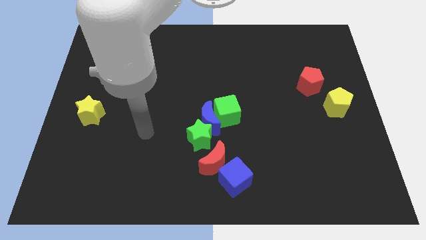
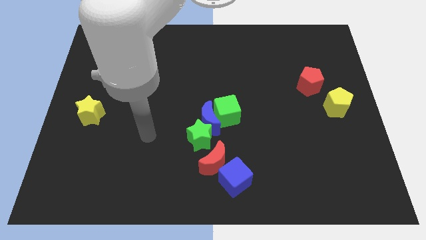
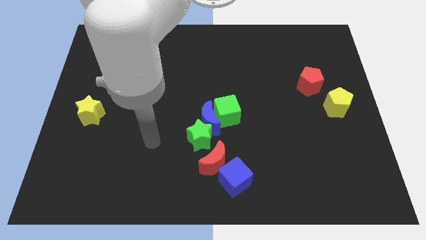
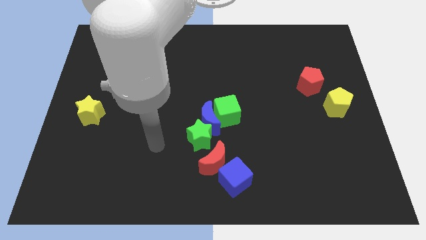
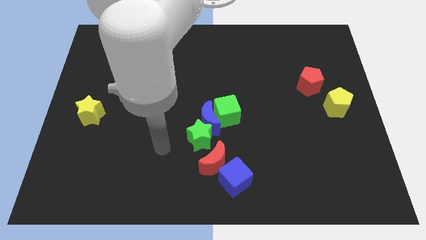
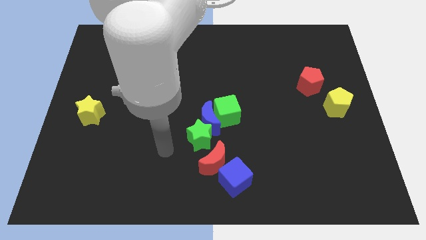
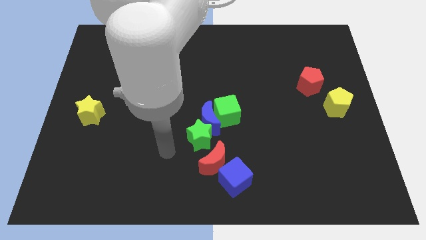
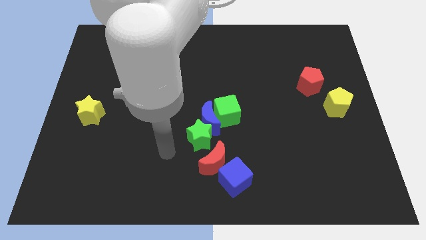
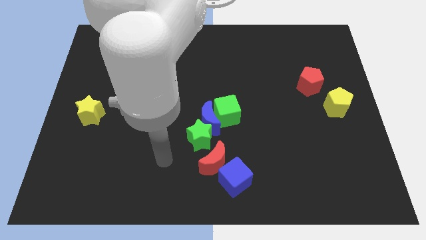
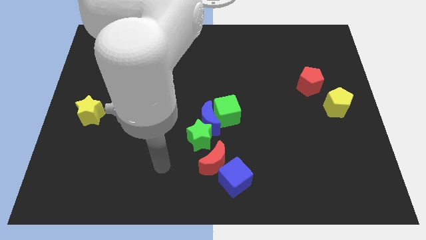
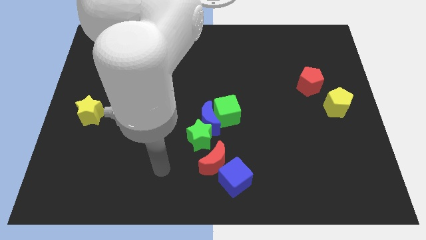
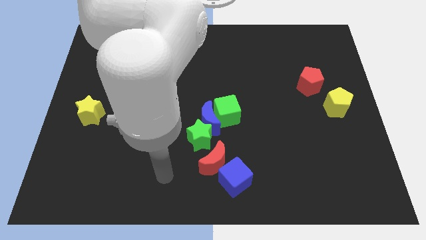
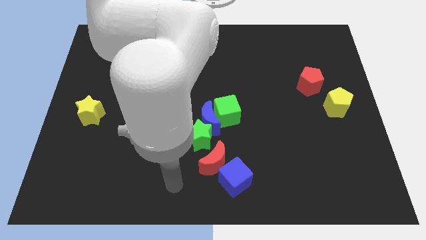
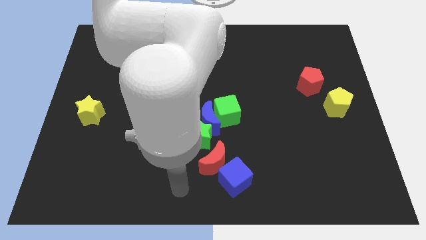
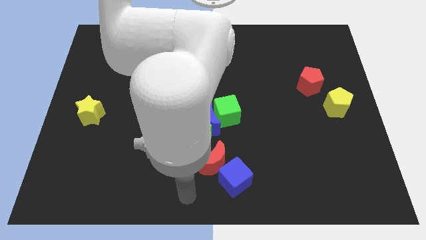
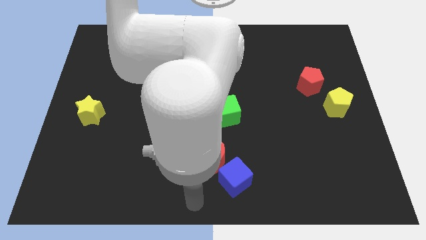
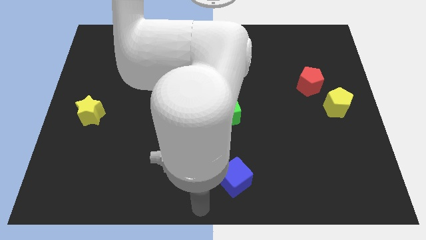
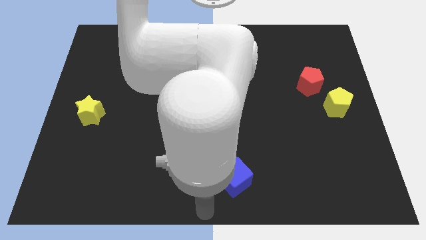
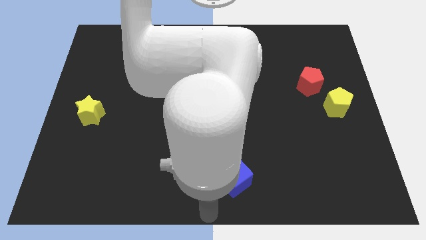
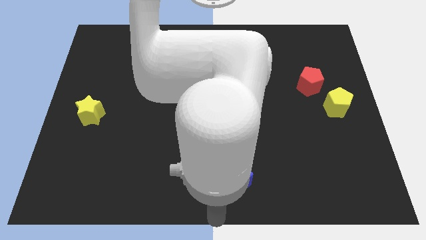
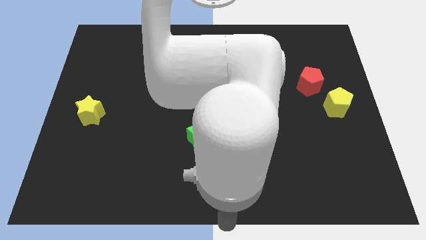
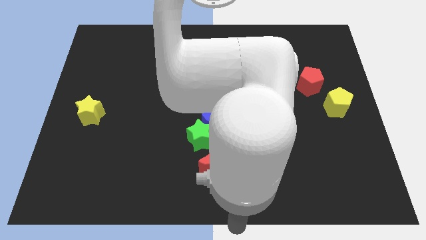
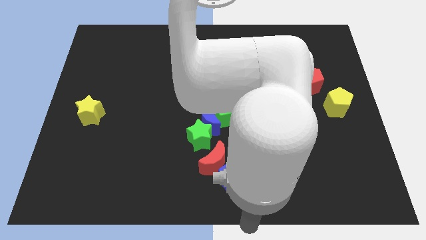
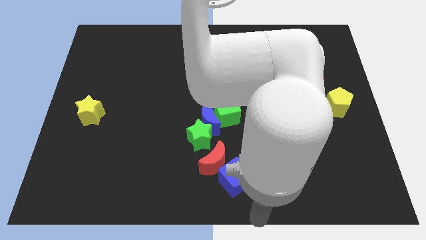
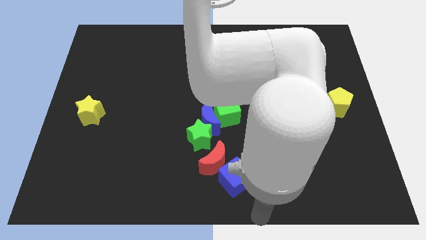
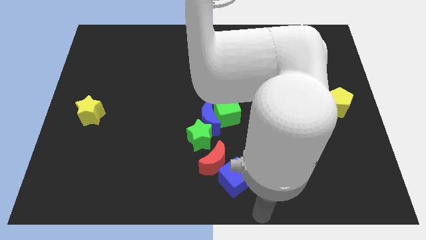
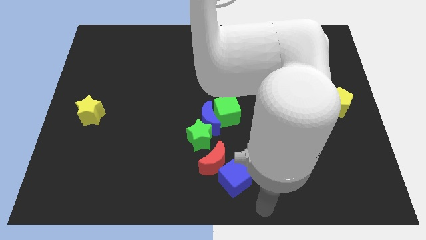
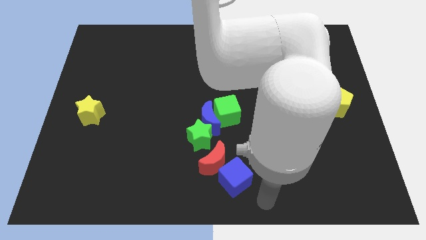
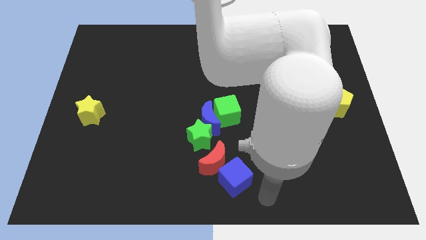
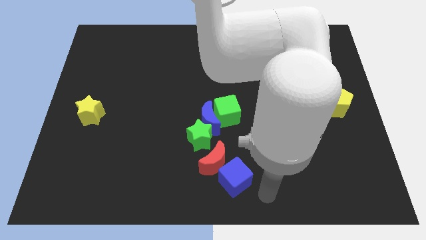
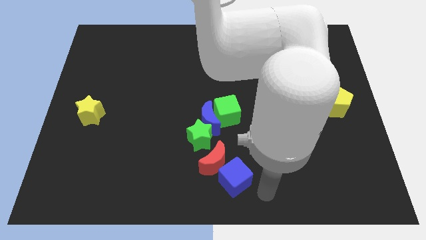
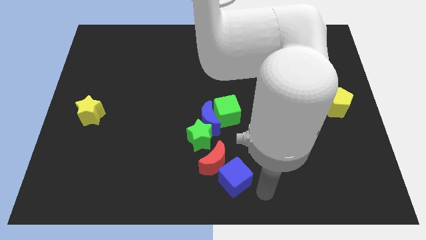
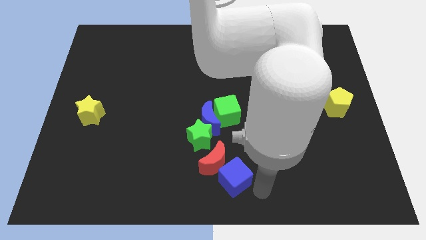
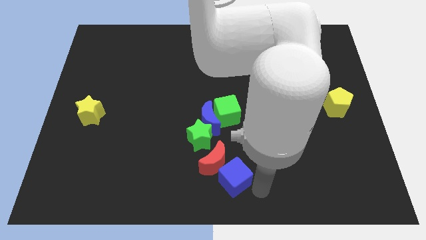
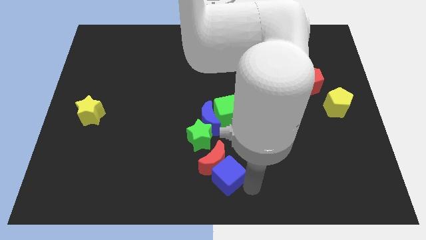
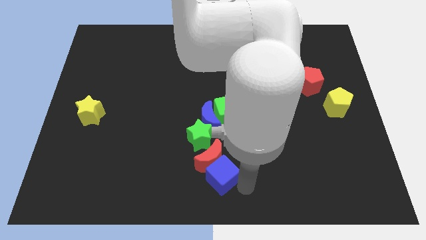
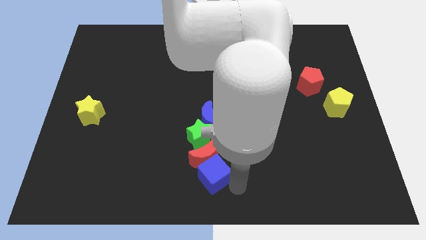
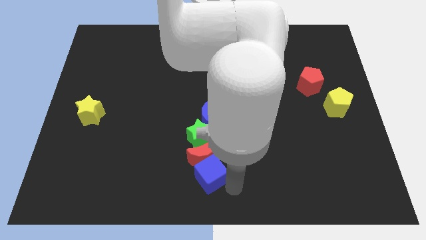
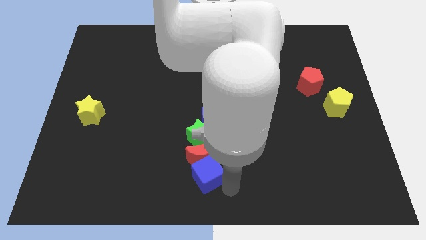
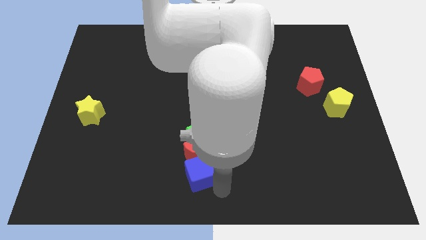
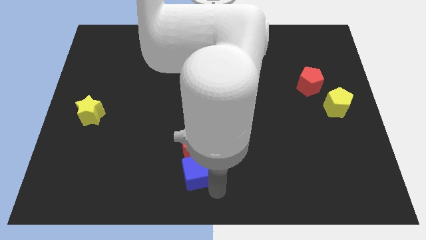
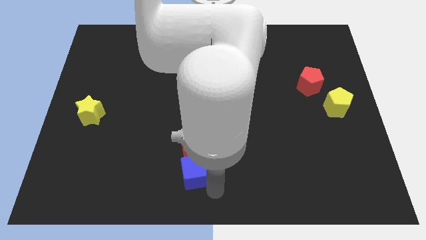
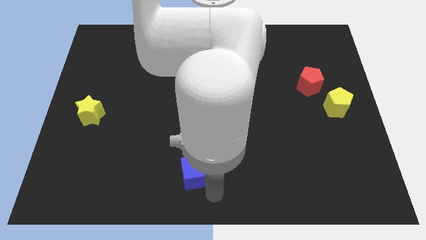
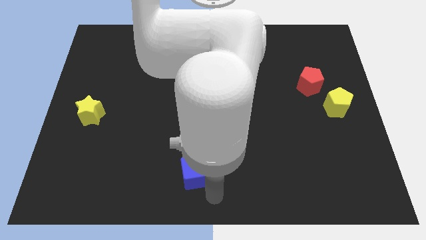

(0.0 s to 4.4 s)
push the red crescent into the green star using the blue cube

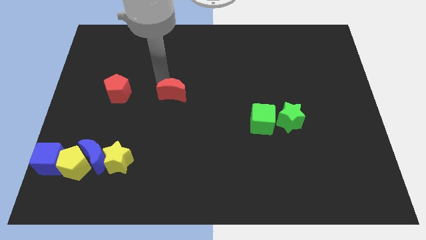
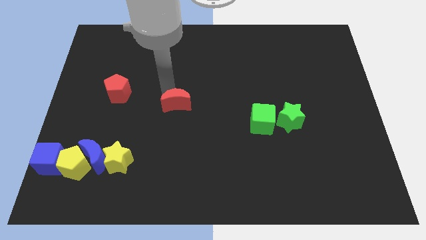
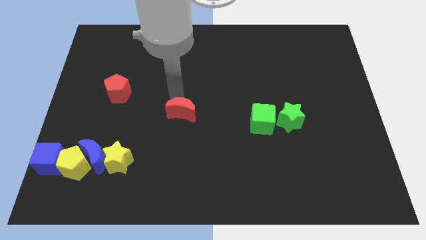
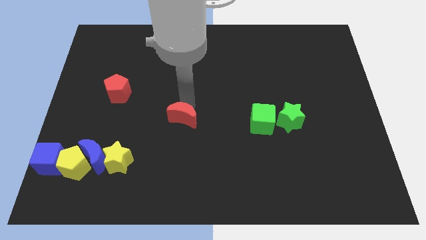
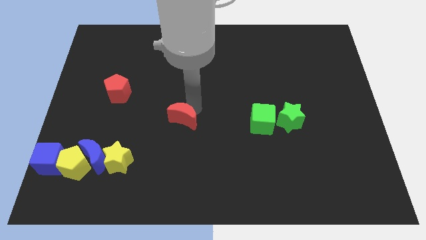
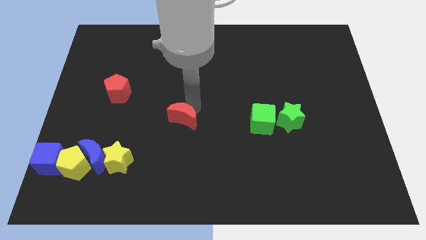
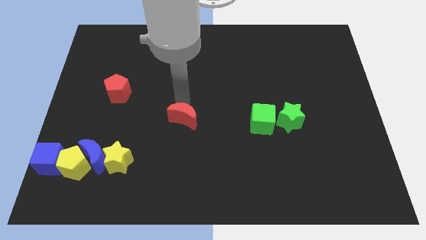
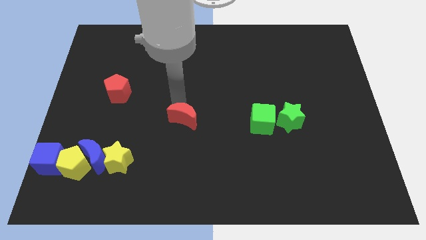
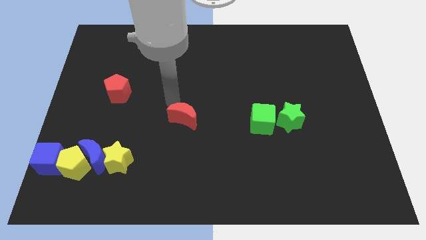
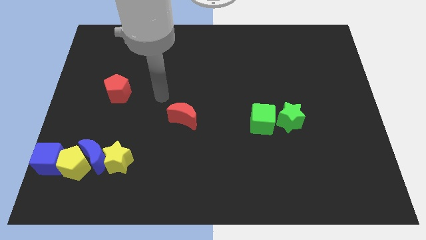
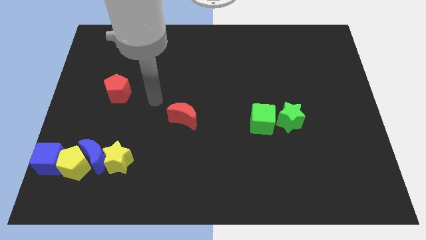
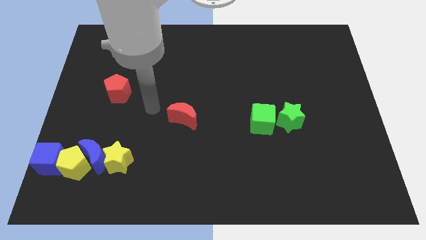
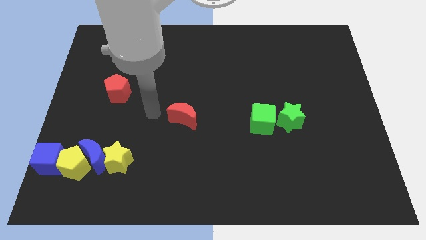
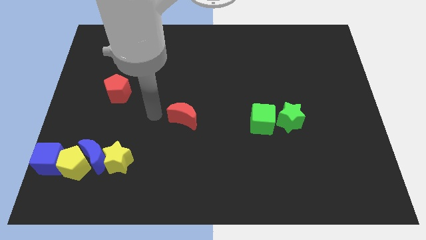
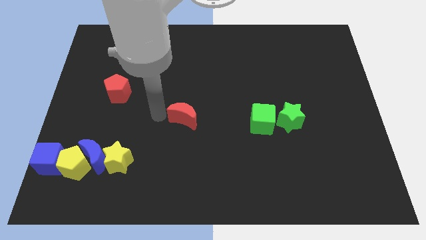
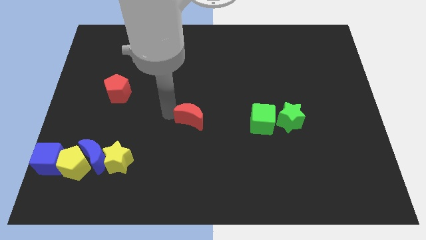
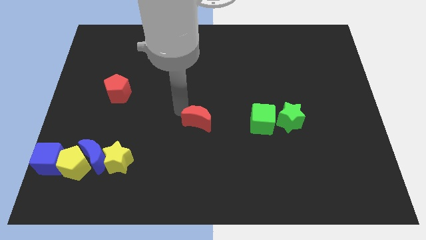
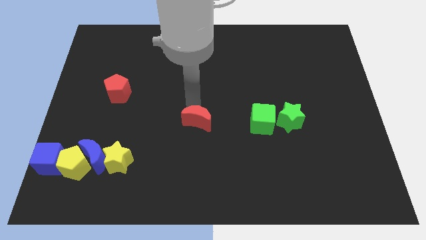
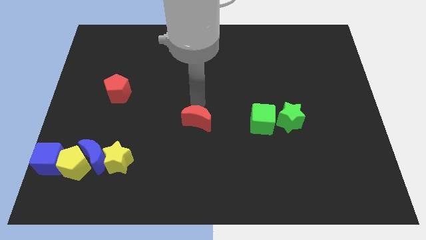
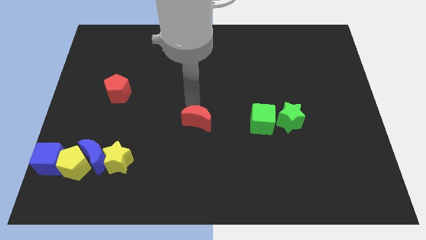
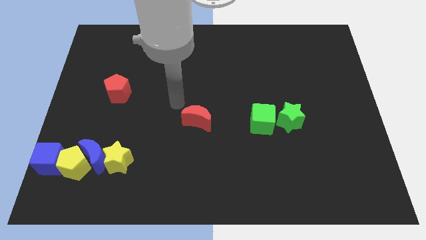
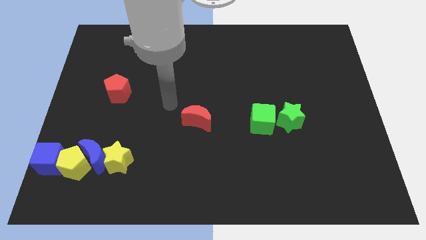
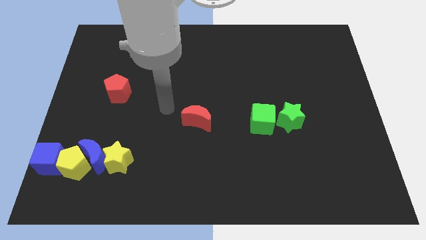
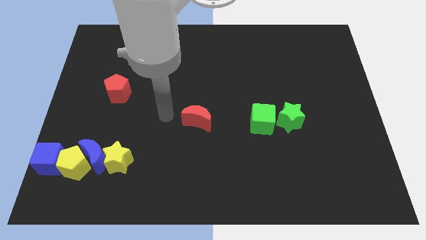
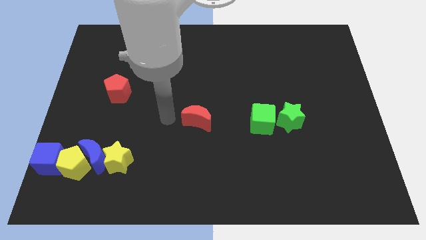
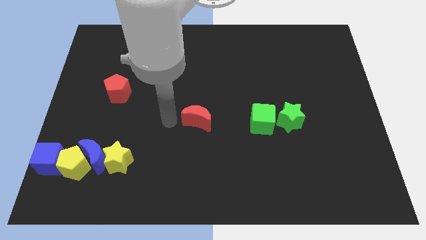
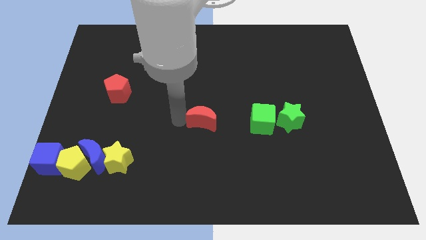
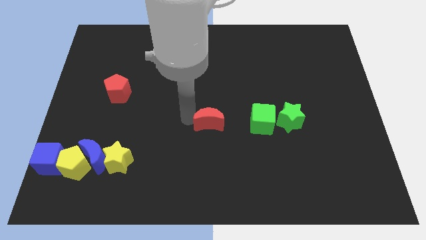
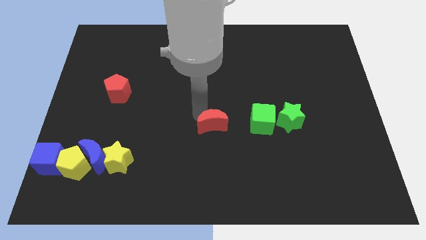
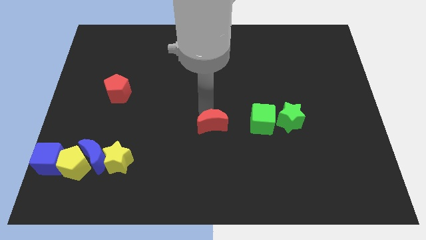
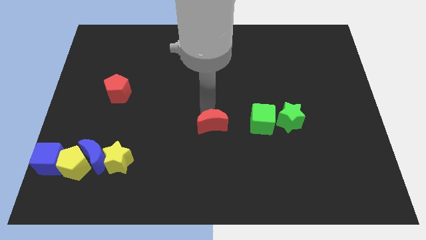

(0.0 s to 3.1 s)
place red moon parallel to green cube

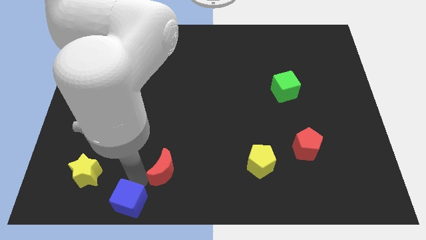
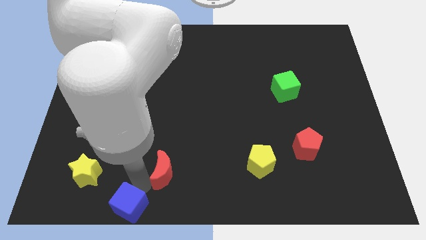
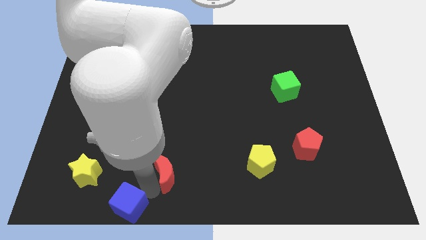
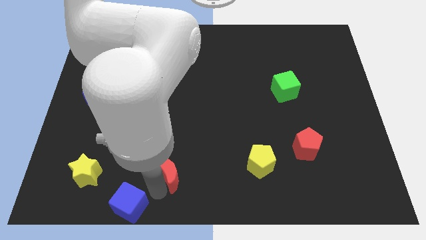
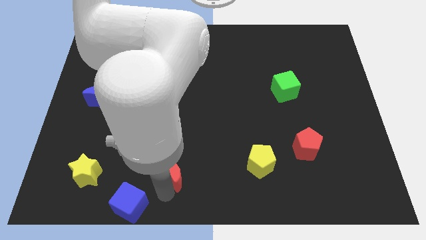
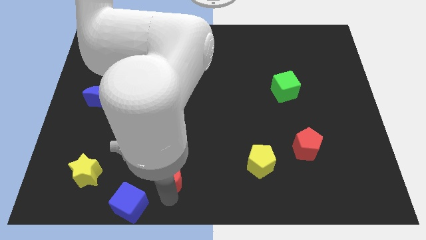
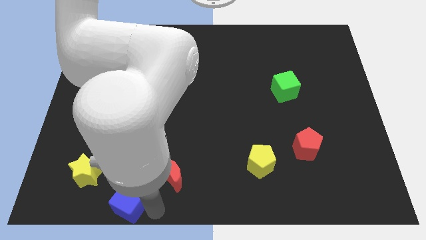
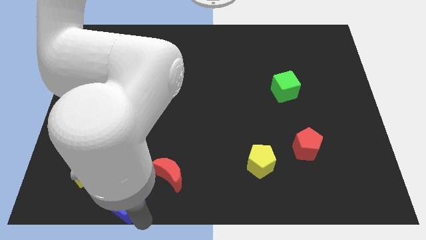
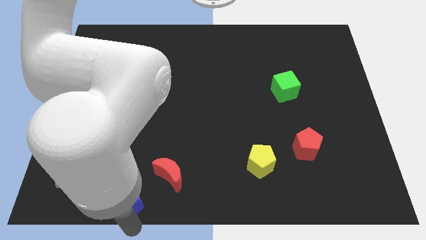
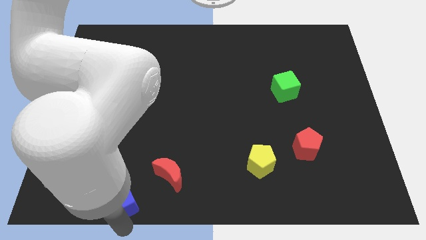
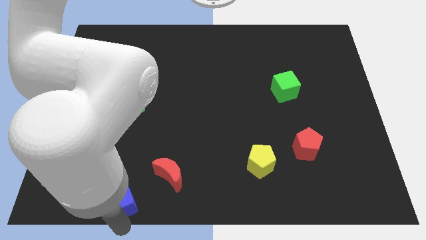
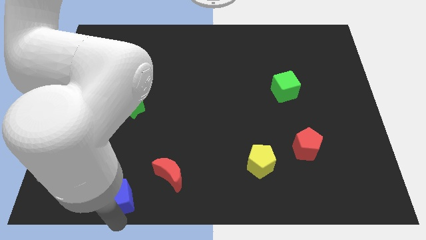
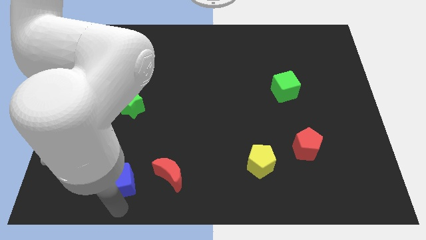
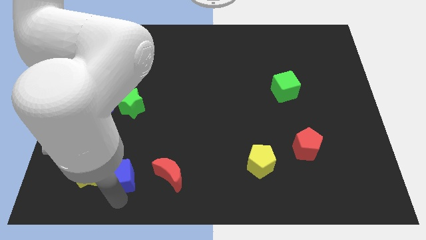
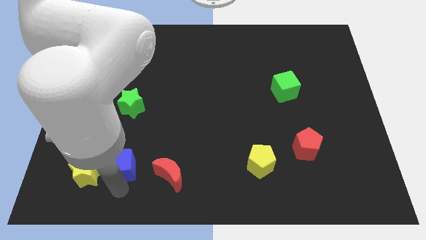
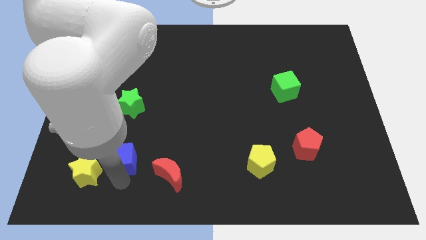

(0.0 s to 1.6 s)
move the blue cube vertically below the green star
